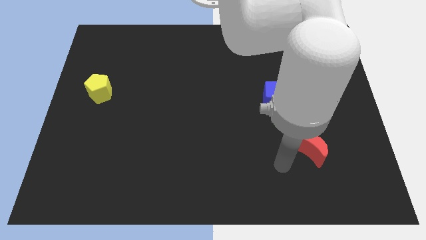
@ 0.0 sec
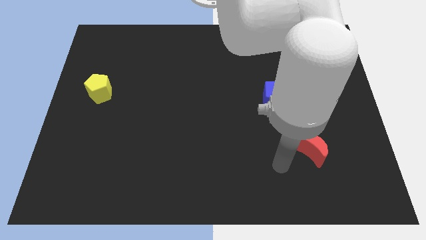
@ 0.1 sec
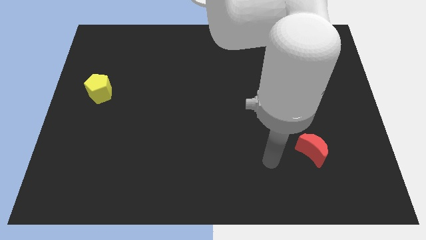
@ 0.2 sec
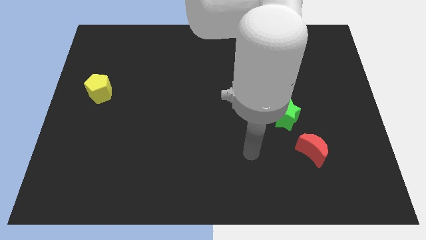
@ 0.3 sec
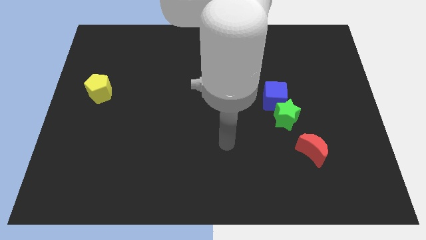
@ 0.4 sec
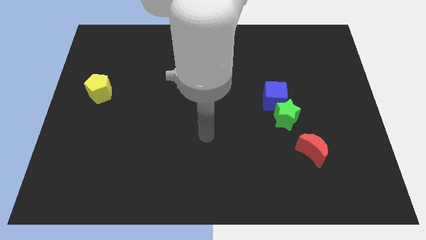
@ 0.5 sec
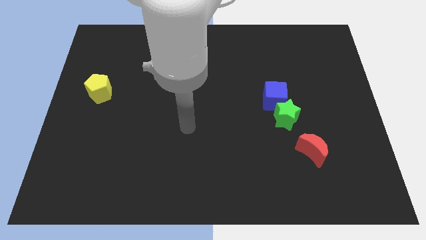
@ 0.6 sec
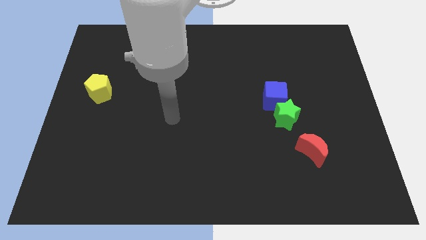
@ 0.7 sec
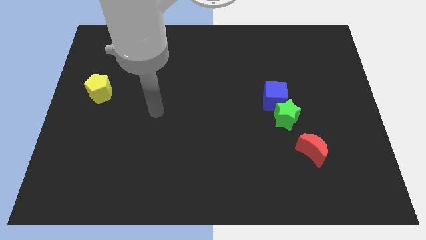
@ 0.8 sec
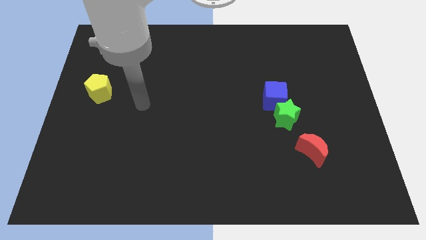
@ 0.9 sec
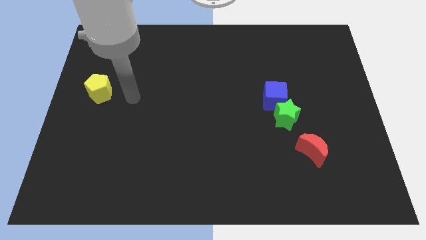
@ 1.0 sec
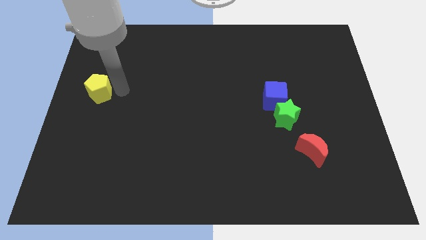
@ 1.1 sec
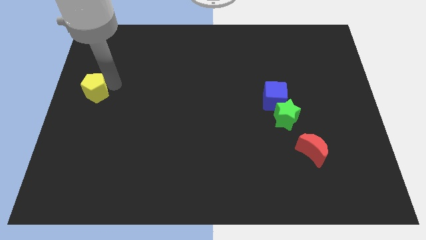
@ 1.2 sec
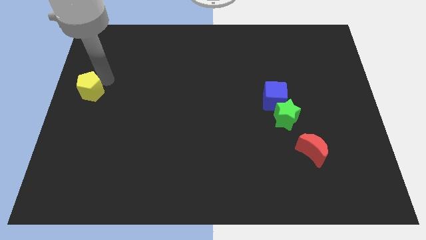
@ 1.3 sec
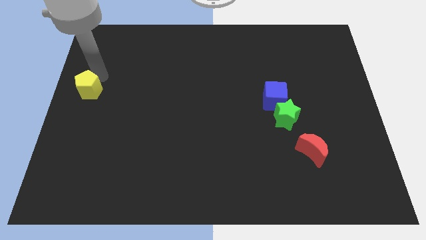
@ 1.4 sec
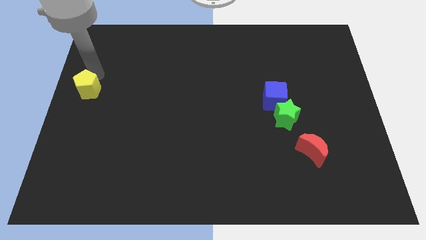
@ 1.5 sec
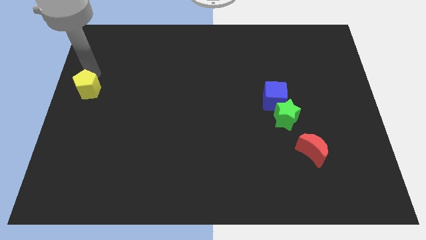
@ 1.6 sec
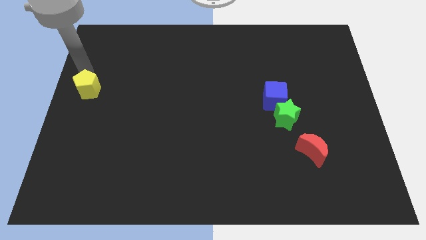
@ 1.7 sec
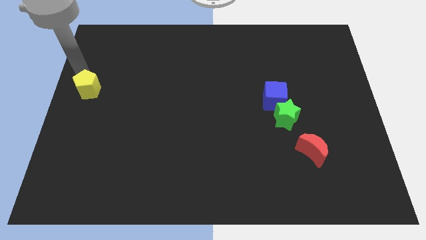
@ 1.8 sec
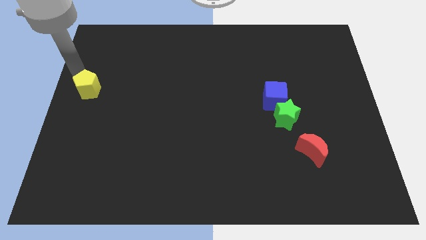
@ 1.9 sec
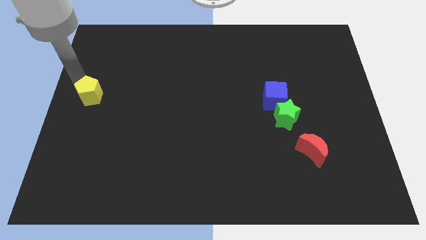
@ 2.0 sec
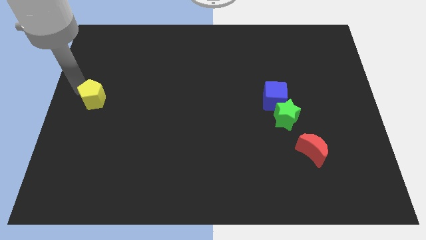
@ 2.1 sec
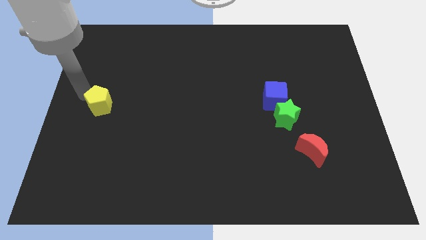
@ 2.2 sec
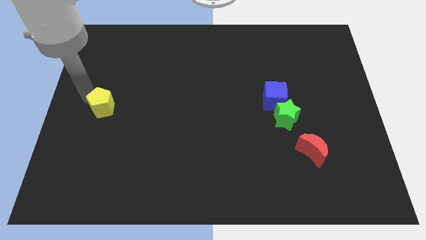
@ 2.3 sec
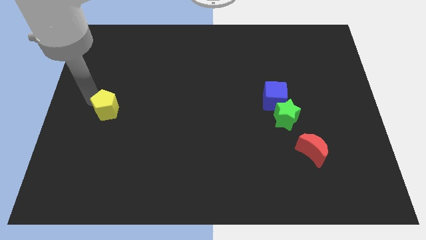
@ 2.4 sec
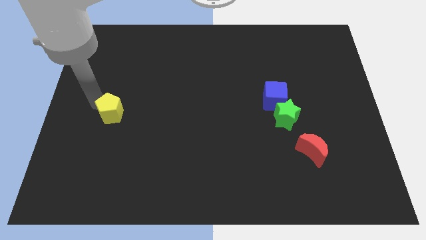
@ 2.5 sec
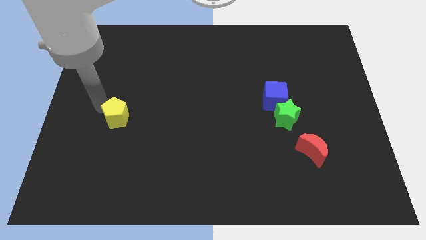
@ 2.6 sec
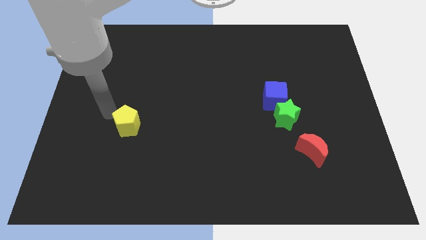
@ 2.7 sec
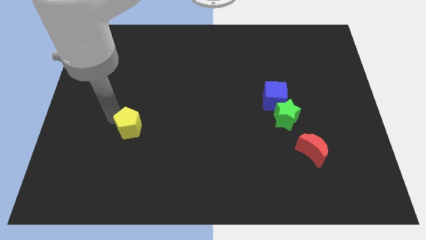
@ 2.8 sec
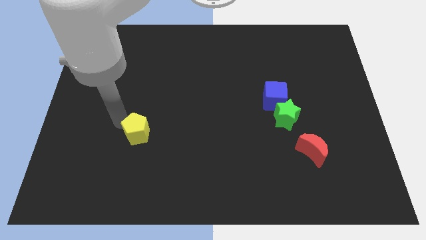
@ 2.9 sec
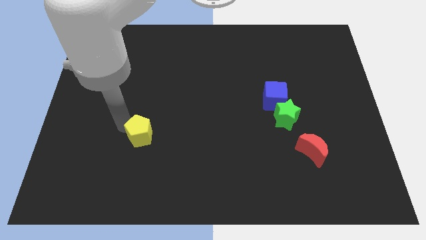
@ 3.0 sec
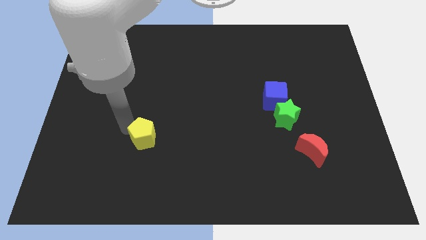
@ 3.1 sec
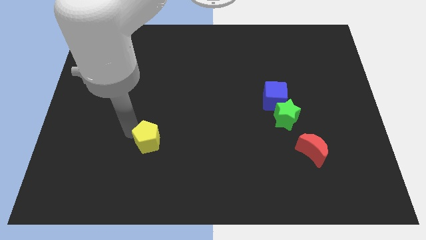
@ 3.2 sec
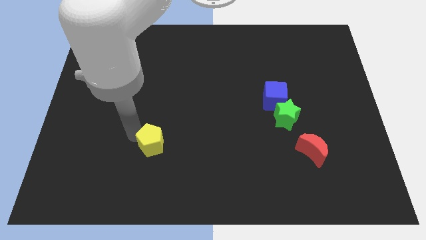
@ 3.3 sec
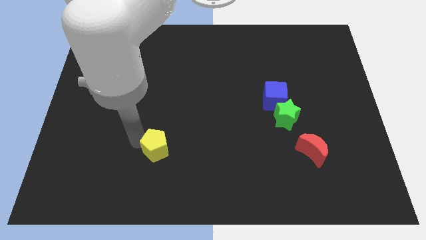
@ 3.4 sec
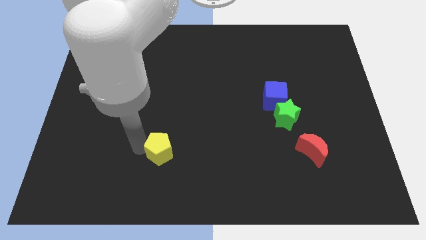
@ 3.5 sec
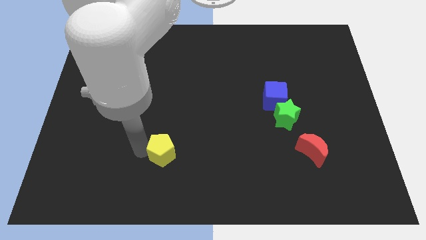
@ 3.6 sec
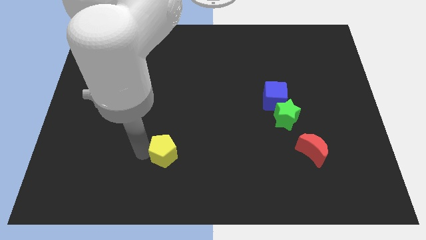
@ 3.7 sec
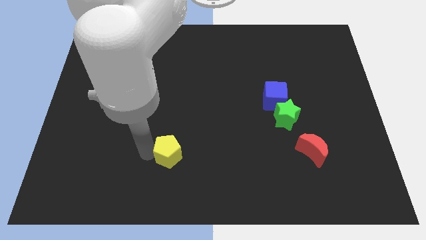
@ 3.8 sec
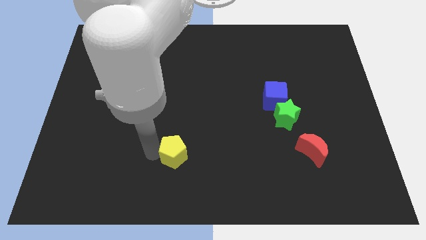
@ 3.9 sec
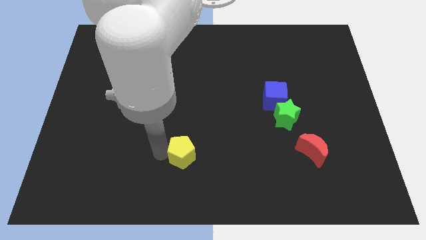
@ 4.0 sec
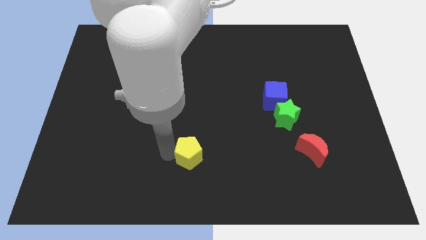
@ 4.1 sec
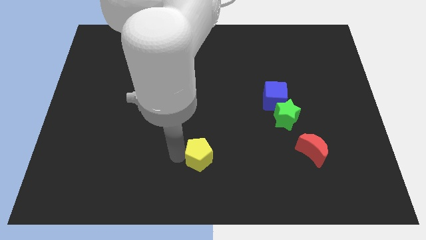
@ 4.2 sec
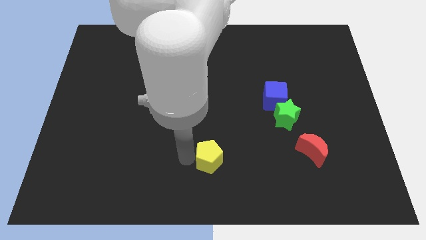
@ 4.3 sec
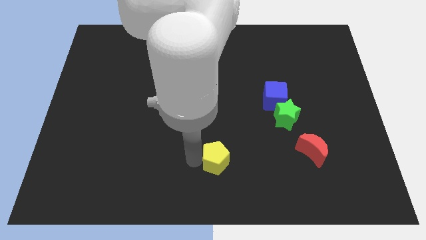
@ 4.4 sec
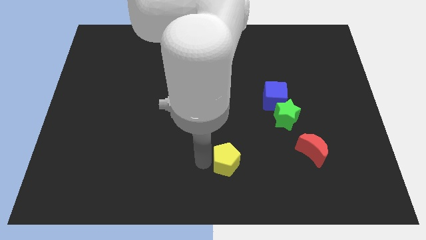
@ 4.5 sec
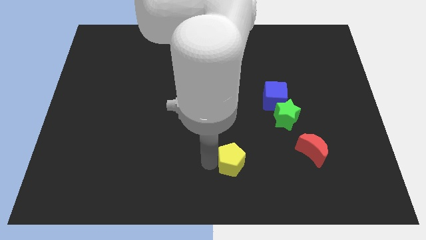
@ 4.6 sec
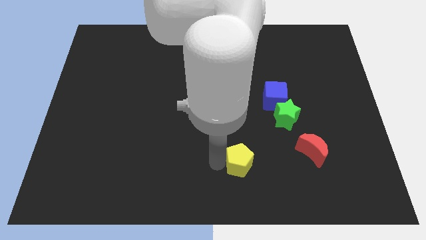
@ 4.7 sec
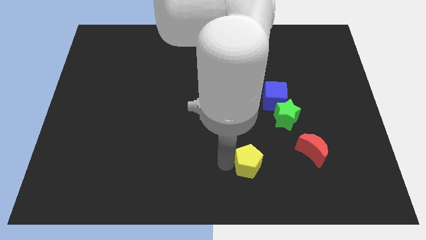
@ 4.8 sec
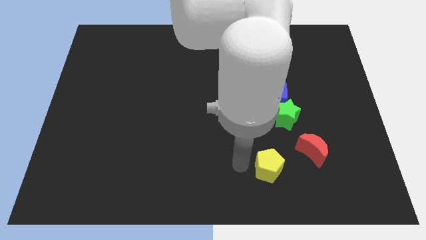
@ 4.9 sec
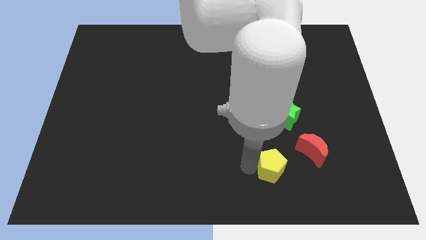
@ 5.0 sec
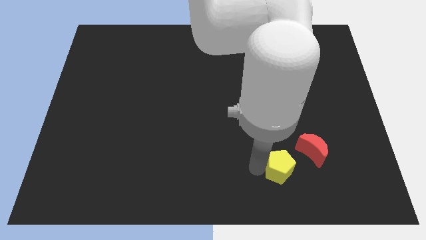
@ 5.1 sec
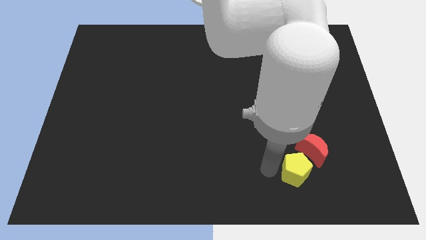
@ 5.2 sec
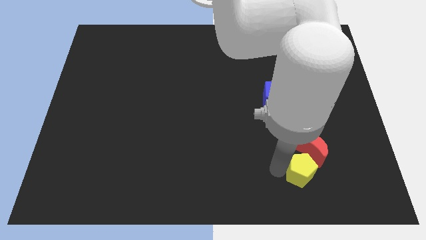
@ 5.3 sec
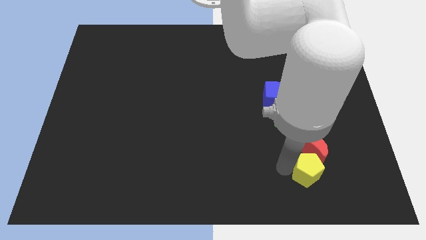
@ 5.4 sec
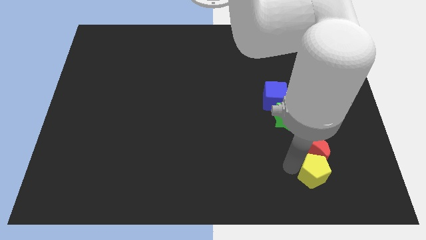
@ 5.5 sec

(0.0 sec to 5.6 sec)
push the yellow block towards the red block

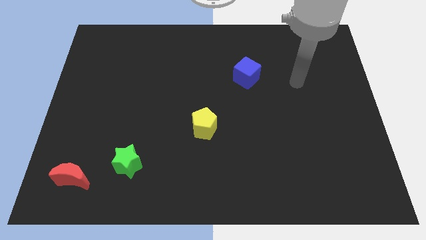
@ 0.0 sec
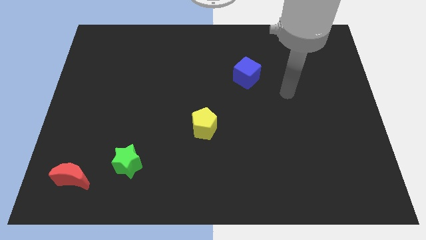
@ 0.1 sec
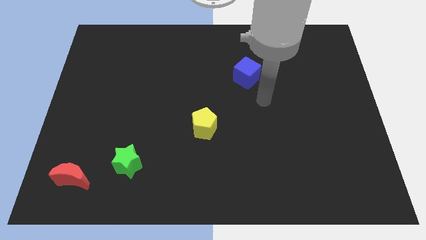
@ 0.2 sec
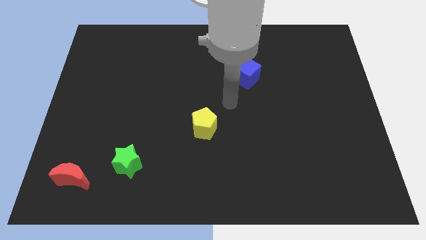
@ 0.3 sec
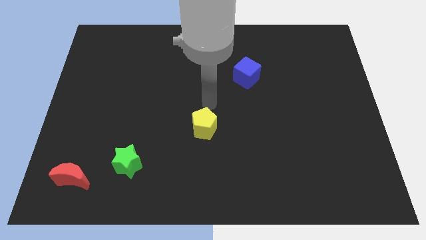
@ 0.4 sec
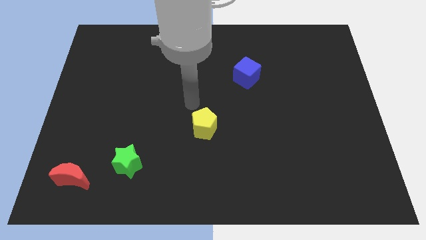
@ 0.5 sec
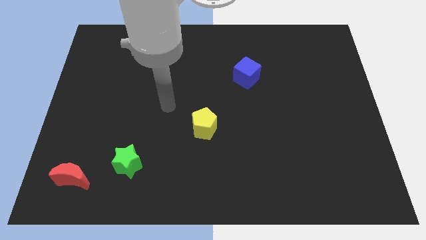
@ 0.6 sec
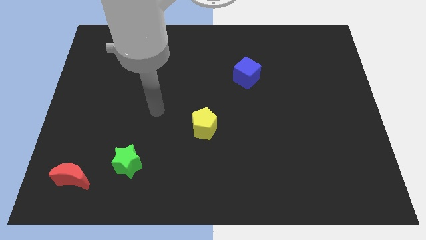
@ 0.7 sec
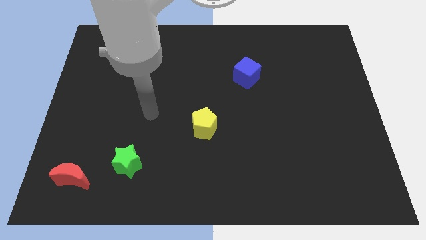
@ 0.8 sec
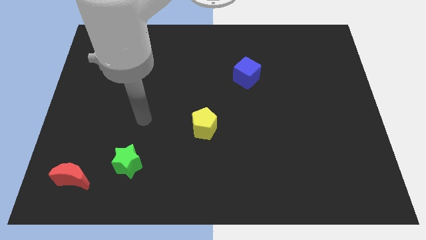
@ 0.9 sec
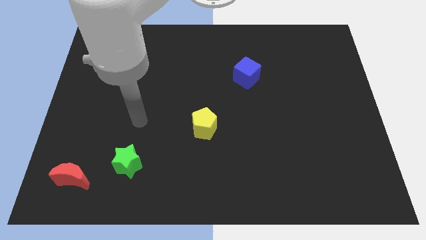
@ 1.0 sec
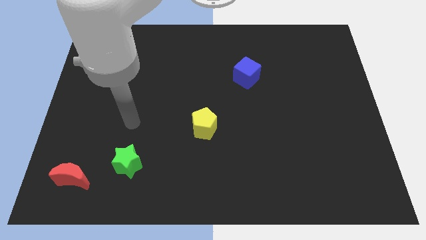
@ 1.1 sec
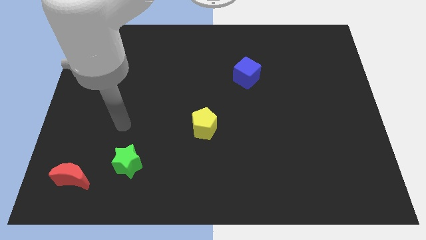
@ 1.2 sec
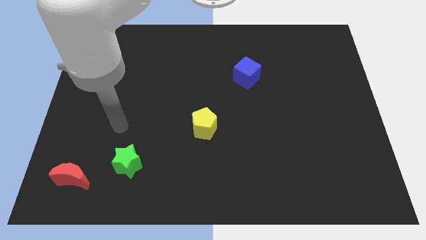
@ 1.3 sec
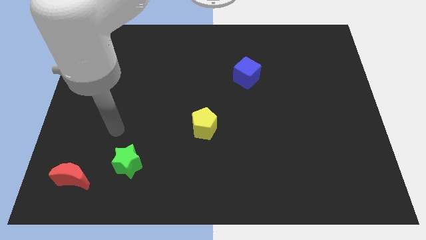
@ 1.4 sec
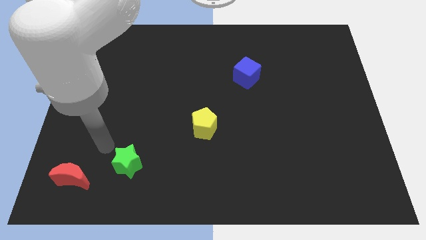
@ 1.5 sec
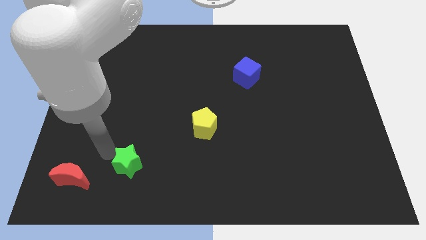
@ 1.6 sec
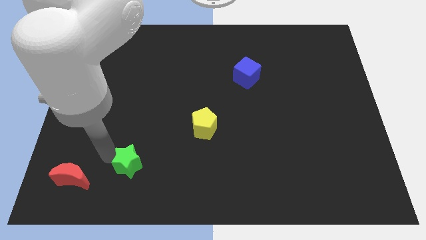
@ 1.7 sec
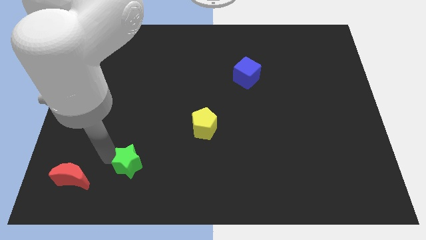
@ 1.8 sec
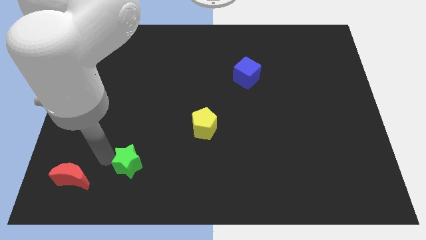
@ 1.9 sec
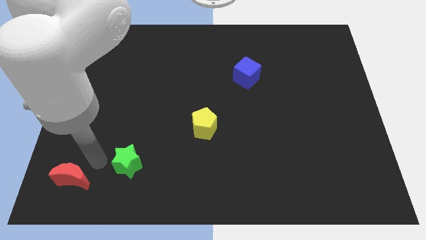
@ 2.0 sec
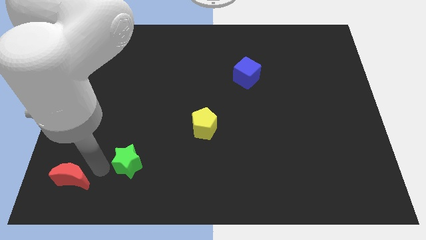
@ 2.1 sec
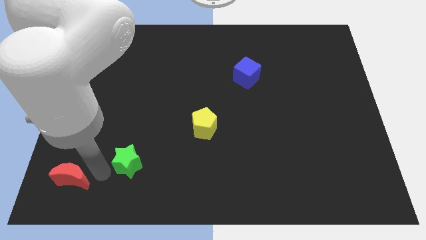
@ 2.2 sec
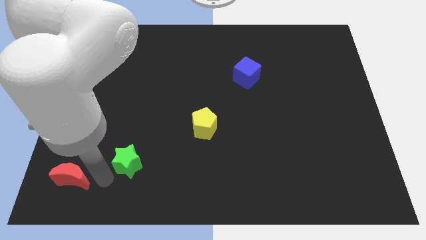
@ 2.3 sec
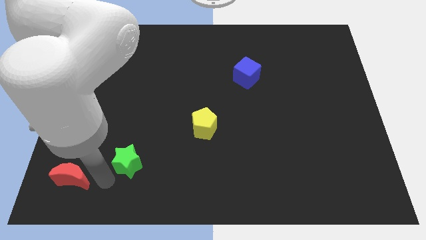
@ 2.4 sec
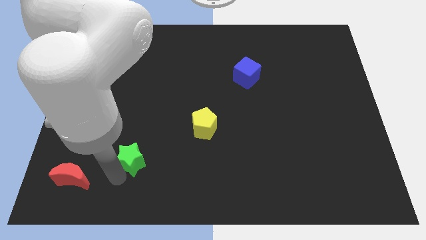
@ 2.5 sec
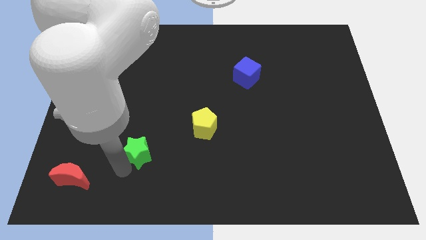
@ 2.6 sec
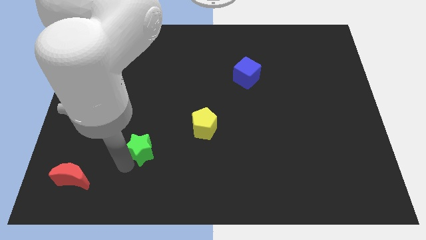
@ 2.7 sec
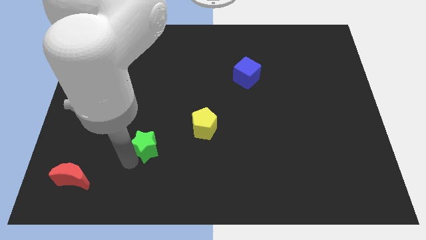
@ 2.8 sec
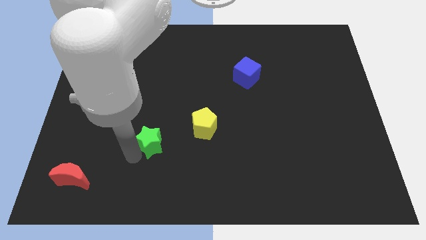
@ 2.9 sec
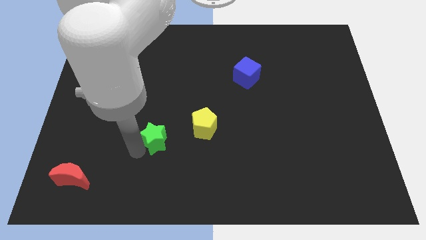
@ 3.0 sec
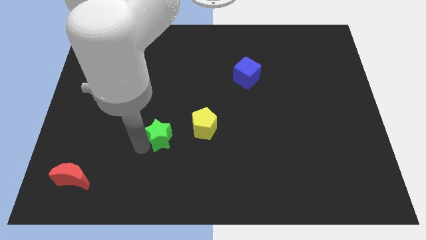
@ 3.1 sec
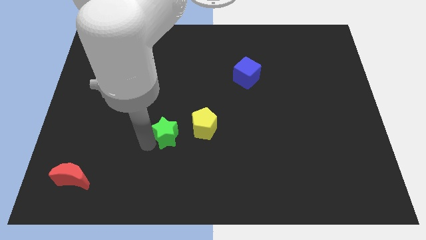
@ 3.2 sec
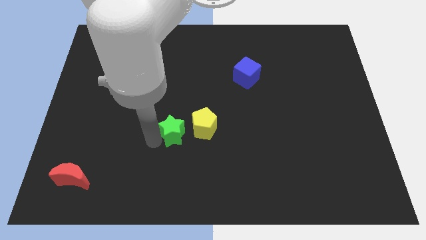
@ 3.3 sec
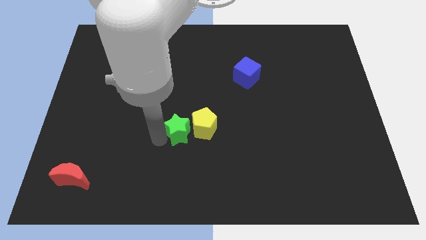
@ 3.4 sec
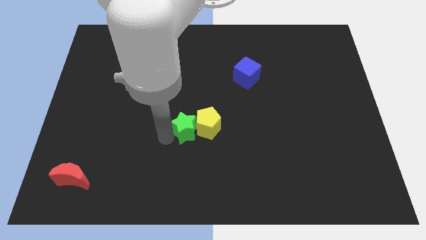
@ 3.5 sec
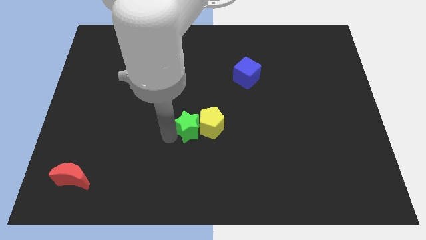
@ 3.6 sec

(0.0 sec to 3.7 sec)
slide the green block next to the yellow block
